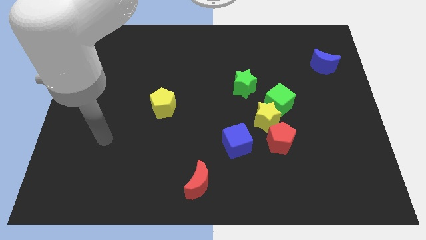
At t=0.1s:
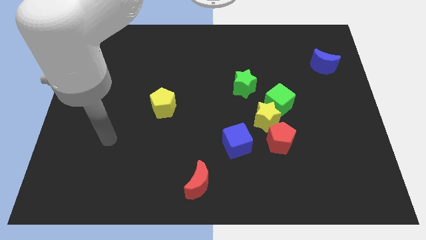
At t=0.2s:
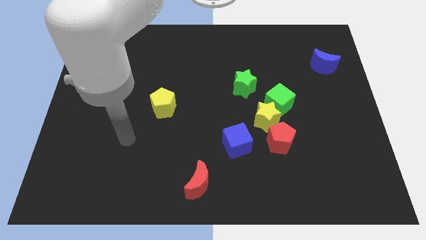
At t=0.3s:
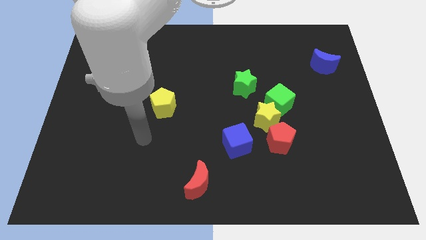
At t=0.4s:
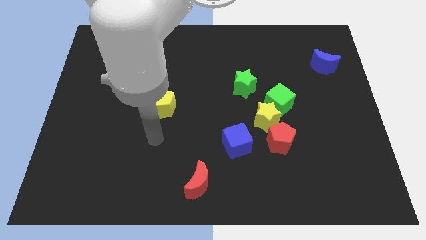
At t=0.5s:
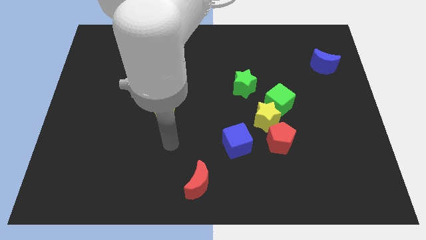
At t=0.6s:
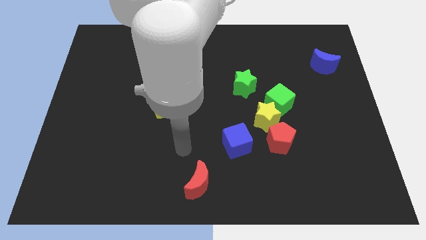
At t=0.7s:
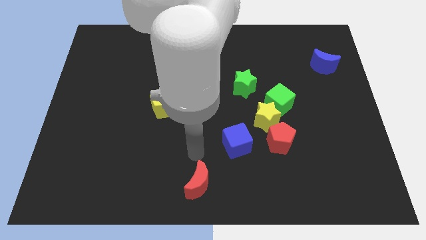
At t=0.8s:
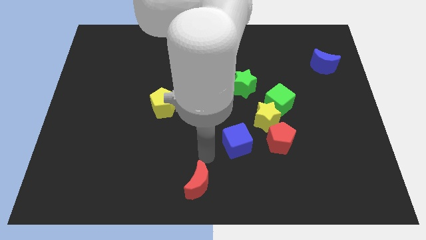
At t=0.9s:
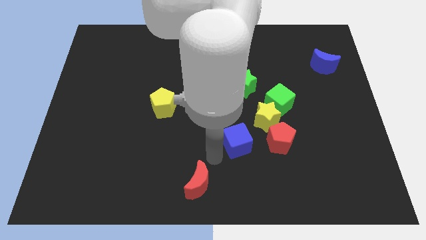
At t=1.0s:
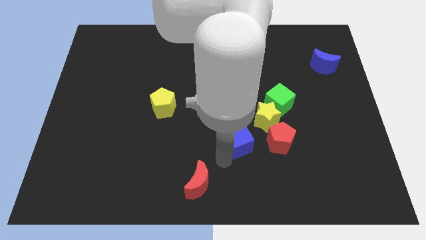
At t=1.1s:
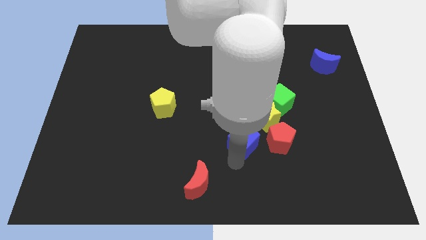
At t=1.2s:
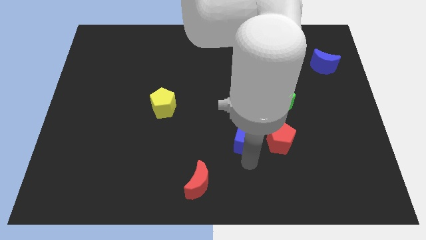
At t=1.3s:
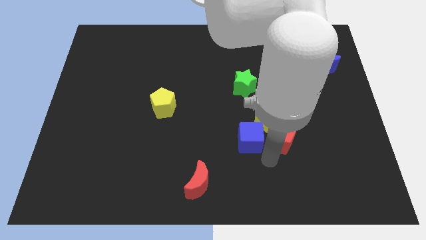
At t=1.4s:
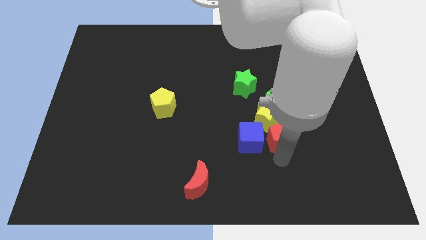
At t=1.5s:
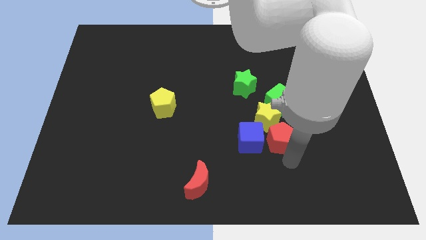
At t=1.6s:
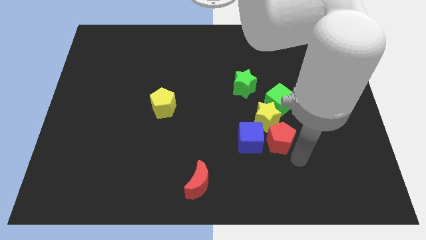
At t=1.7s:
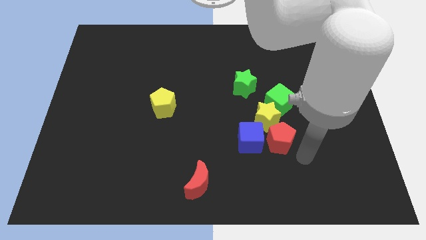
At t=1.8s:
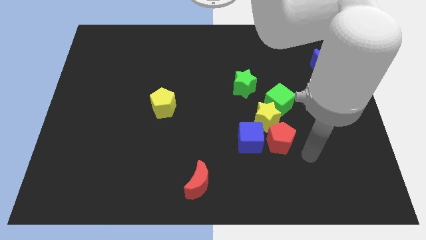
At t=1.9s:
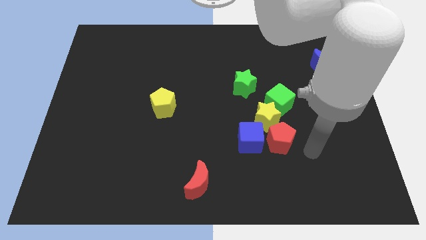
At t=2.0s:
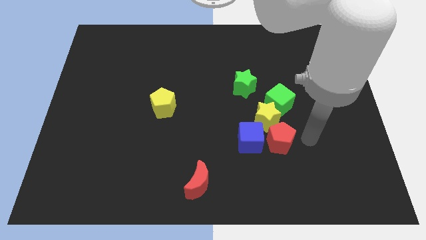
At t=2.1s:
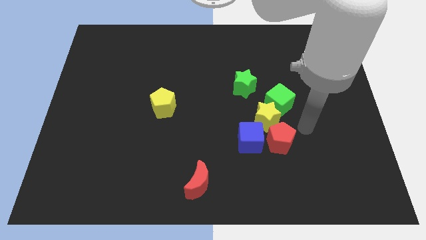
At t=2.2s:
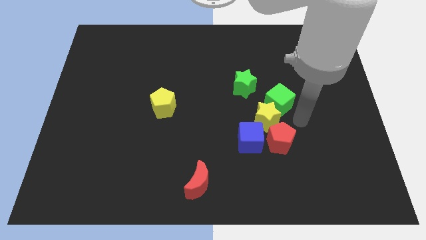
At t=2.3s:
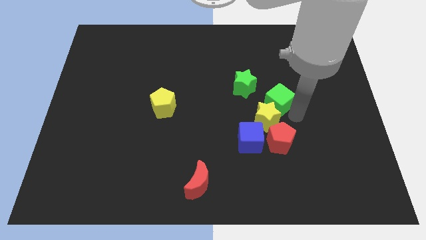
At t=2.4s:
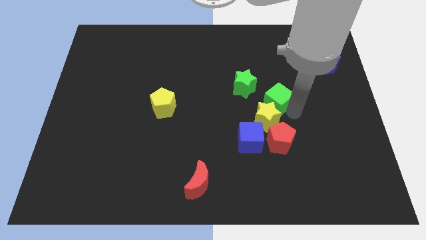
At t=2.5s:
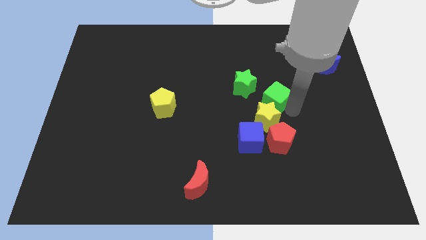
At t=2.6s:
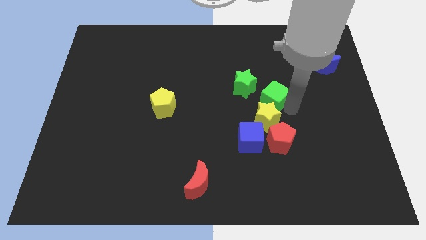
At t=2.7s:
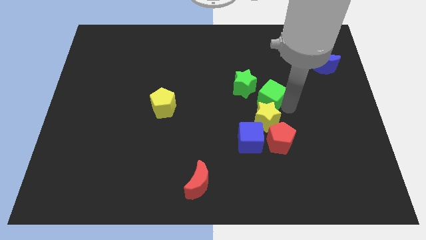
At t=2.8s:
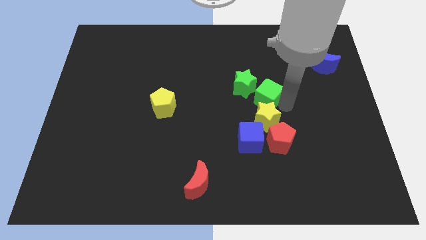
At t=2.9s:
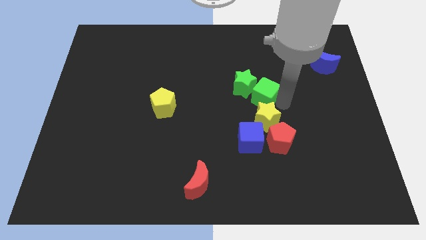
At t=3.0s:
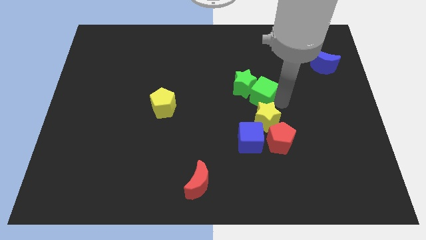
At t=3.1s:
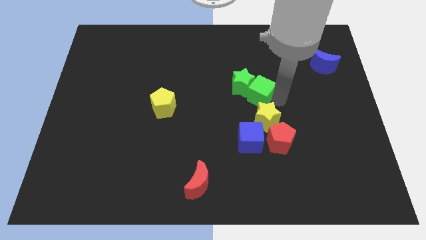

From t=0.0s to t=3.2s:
slide the green cube close to the green star

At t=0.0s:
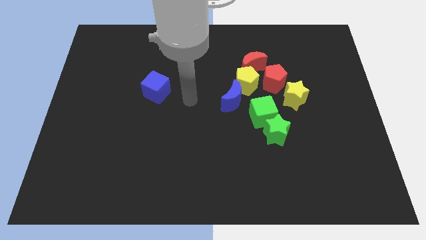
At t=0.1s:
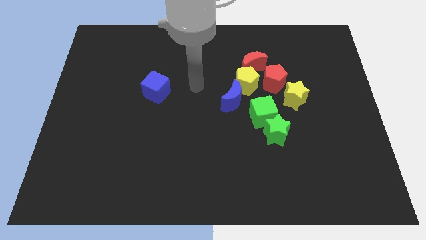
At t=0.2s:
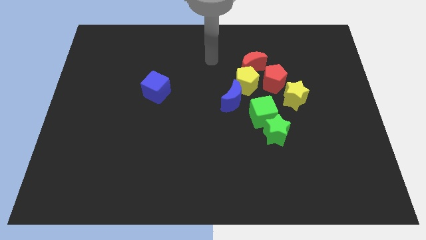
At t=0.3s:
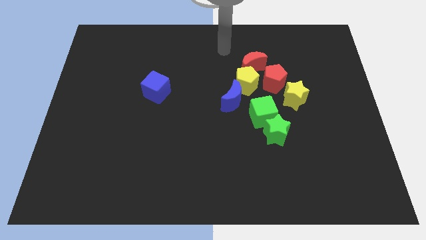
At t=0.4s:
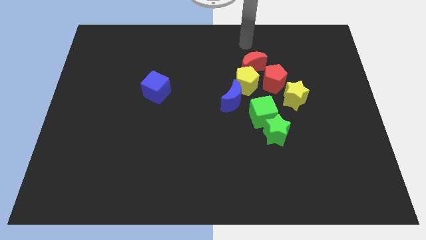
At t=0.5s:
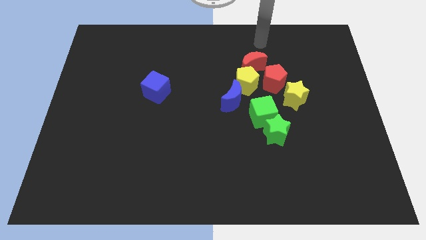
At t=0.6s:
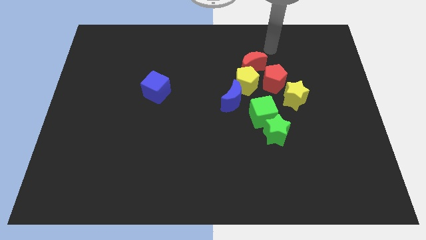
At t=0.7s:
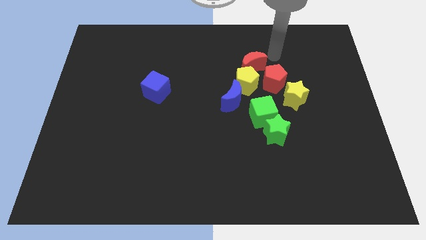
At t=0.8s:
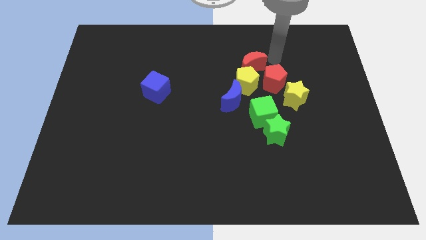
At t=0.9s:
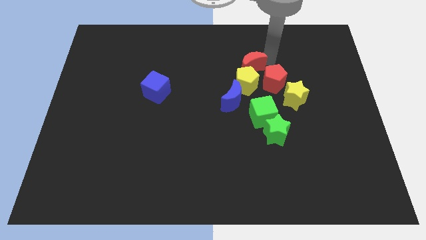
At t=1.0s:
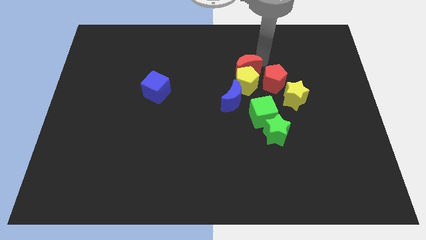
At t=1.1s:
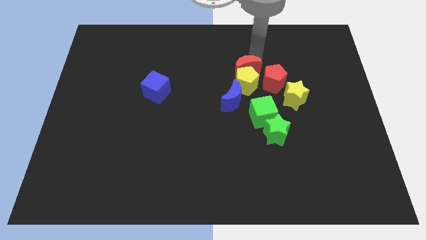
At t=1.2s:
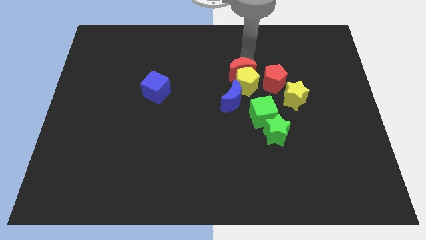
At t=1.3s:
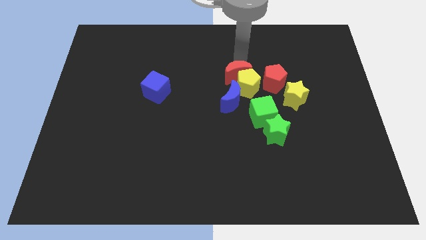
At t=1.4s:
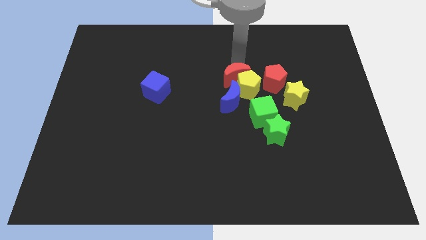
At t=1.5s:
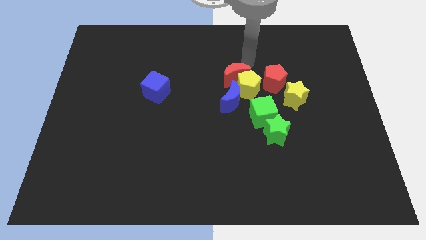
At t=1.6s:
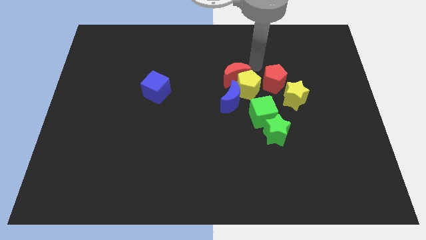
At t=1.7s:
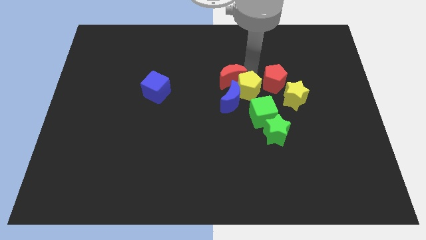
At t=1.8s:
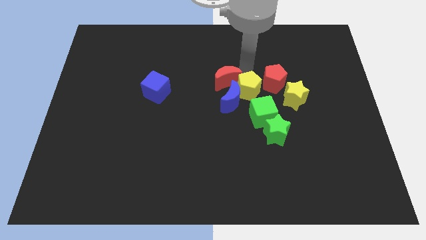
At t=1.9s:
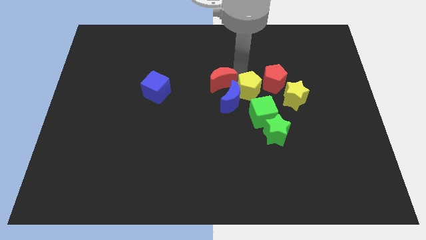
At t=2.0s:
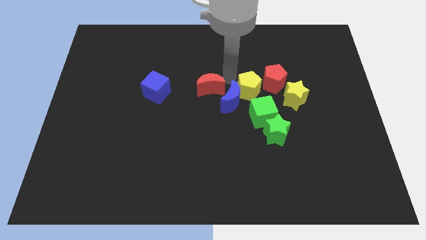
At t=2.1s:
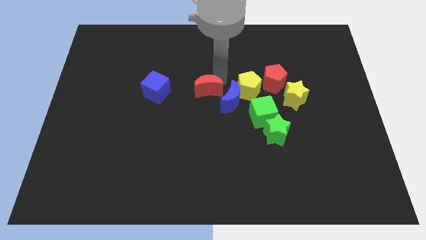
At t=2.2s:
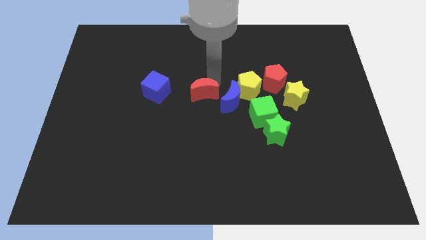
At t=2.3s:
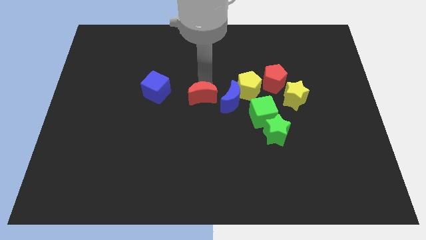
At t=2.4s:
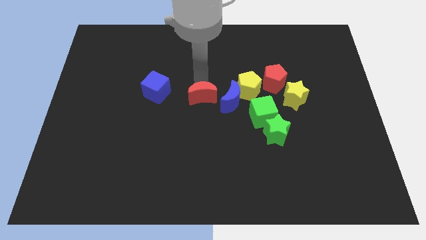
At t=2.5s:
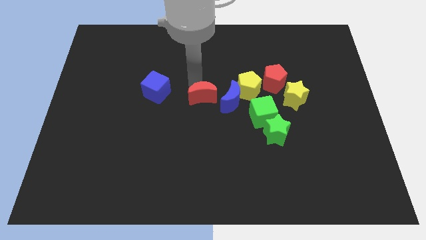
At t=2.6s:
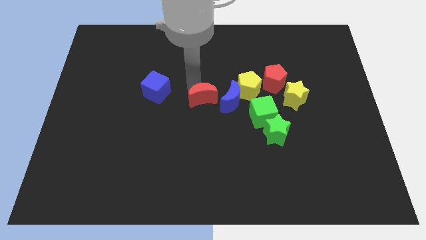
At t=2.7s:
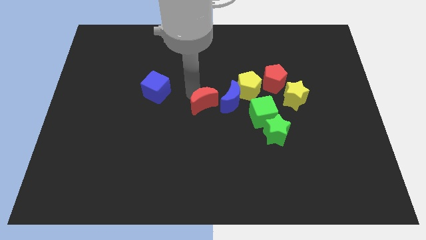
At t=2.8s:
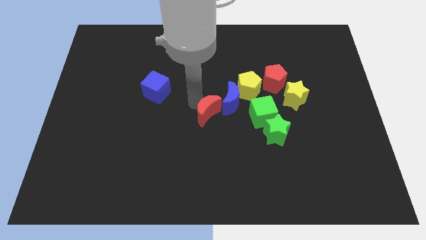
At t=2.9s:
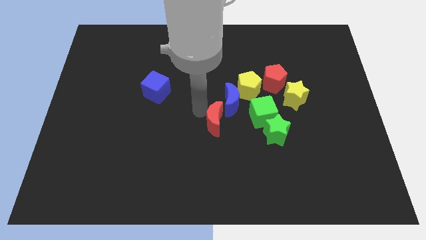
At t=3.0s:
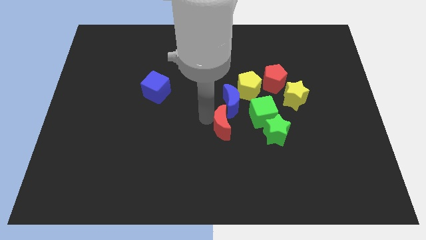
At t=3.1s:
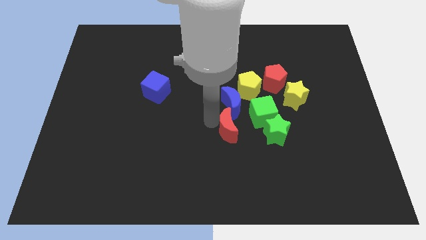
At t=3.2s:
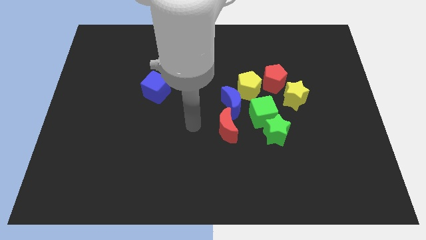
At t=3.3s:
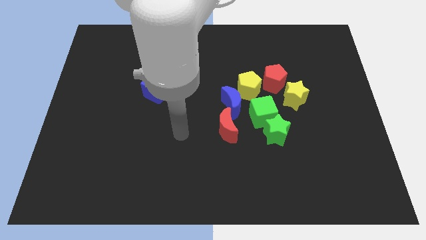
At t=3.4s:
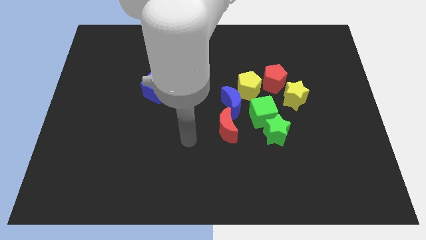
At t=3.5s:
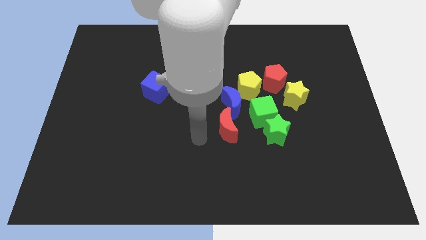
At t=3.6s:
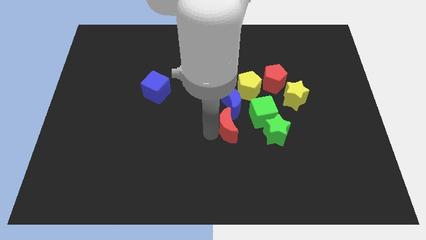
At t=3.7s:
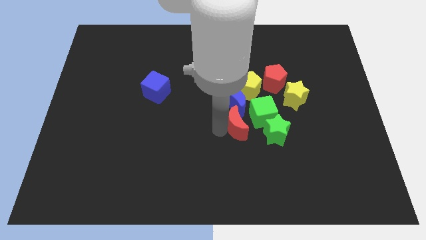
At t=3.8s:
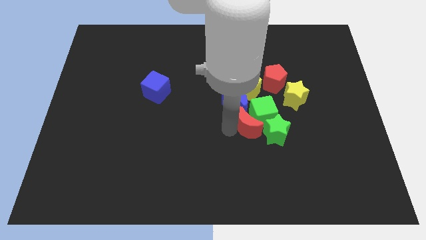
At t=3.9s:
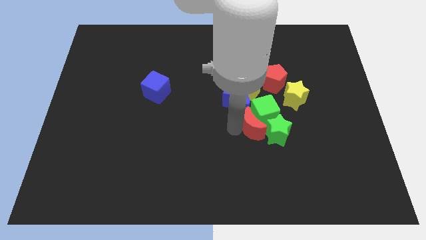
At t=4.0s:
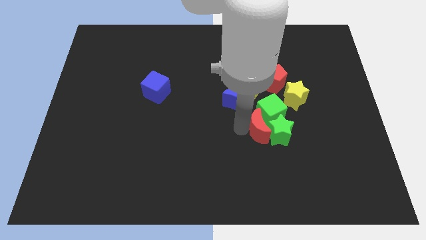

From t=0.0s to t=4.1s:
move the red moon towards the green cube

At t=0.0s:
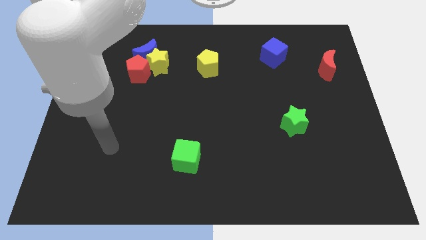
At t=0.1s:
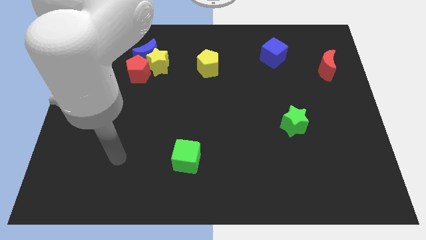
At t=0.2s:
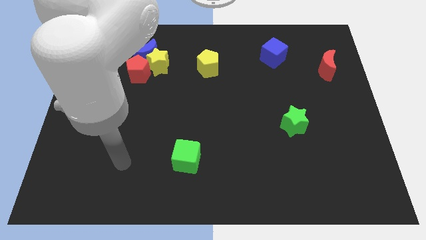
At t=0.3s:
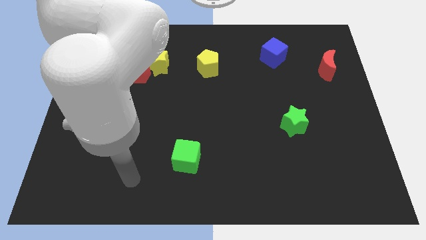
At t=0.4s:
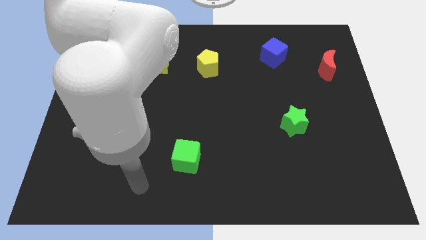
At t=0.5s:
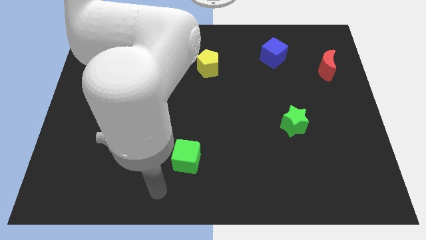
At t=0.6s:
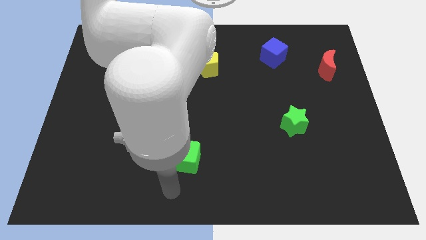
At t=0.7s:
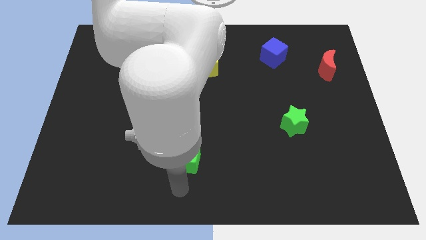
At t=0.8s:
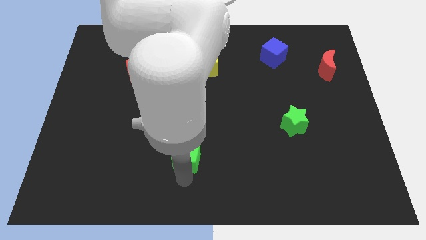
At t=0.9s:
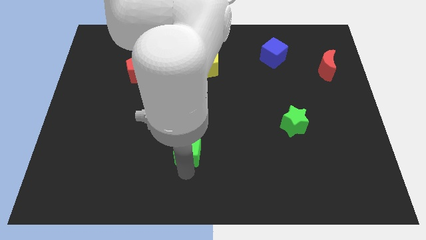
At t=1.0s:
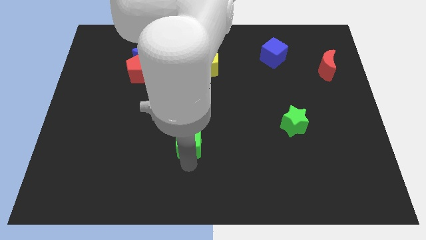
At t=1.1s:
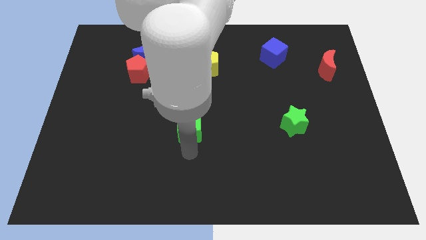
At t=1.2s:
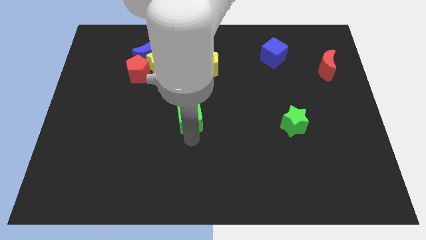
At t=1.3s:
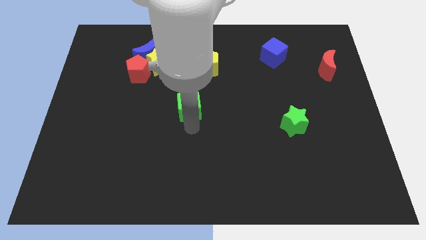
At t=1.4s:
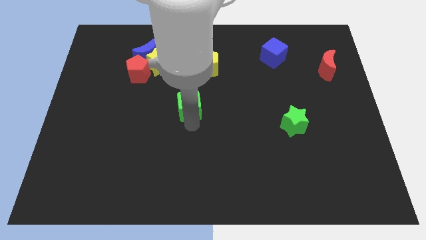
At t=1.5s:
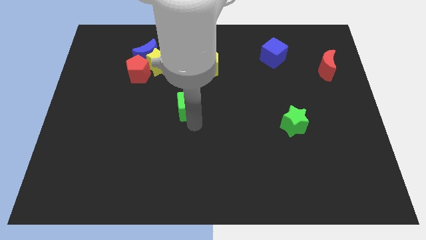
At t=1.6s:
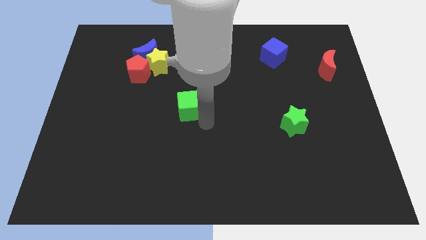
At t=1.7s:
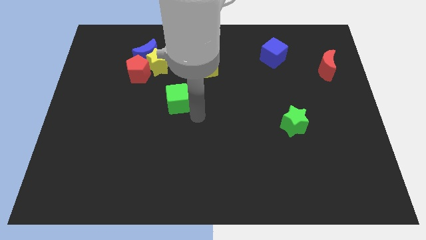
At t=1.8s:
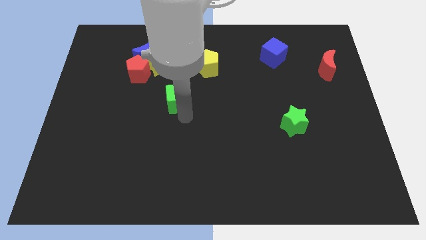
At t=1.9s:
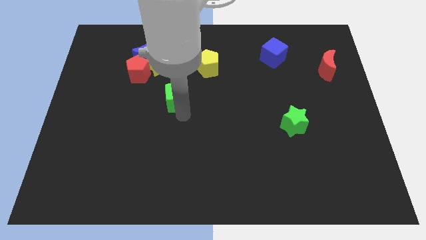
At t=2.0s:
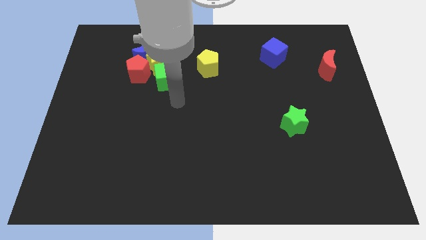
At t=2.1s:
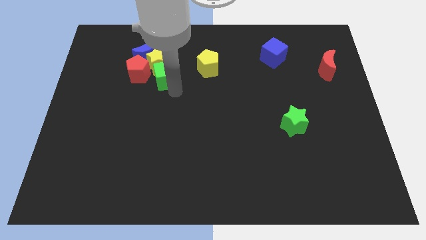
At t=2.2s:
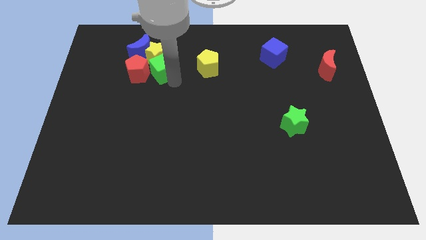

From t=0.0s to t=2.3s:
put the green cube next to the yellow star
